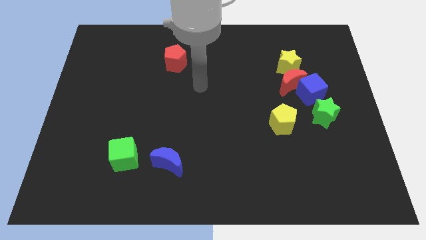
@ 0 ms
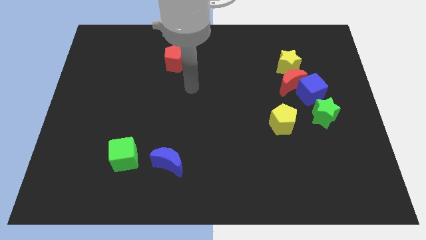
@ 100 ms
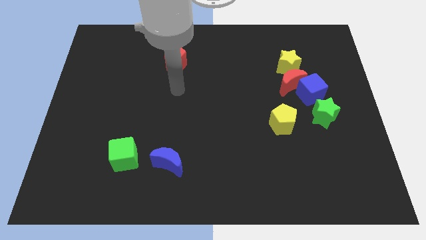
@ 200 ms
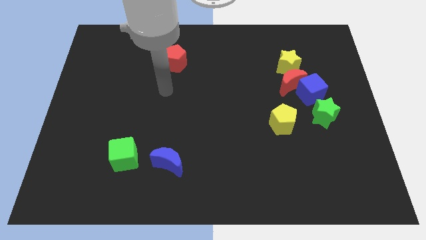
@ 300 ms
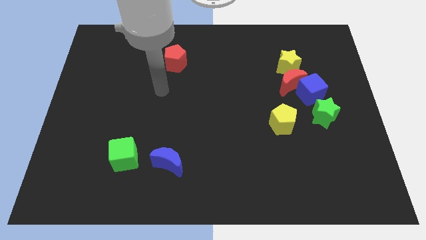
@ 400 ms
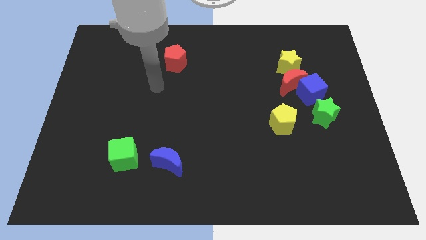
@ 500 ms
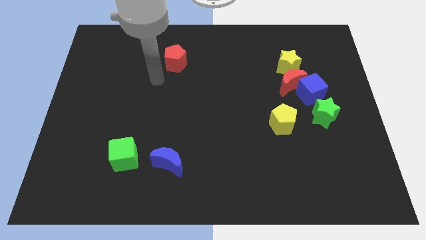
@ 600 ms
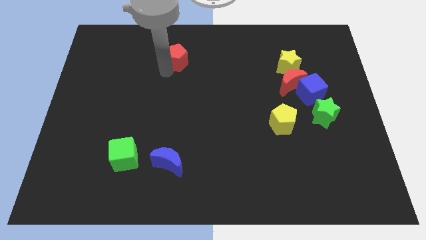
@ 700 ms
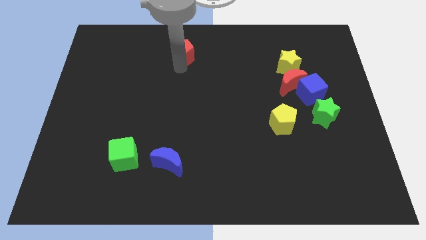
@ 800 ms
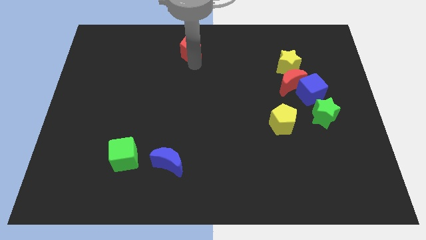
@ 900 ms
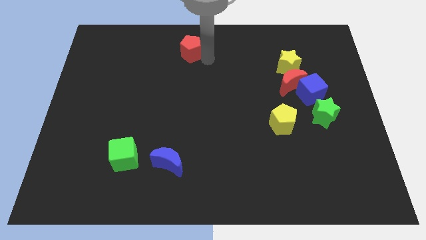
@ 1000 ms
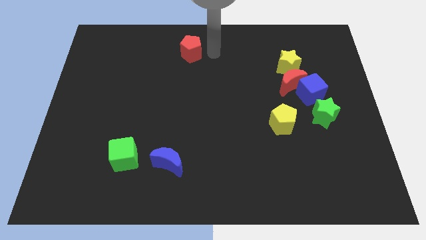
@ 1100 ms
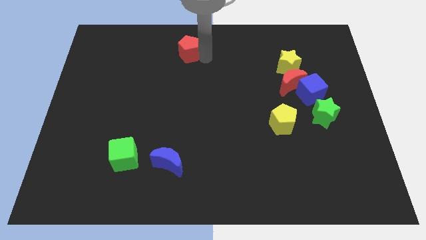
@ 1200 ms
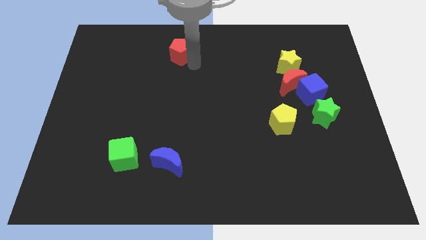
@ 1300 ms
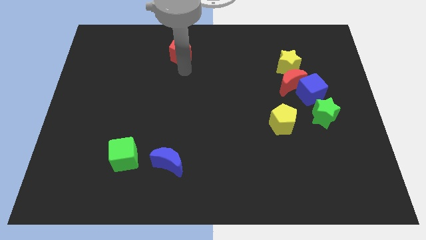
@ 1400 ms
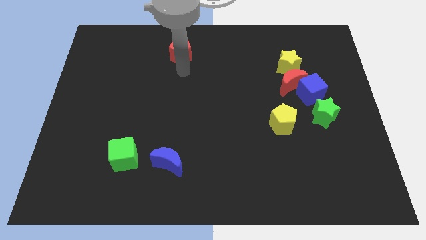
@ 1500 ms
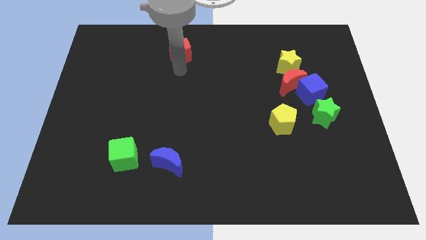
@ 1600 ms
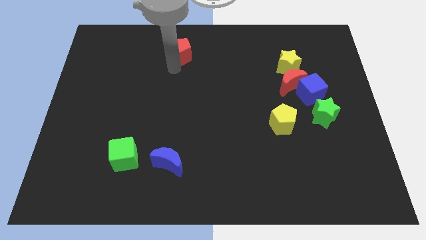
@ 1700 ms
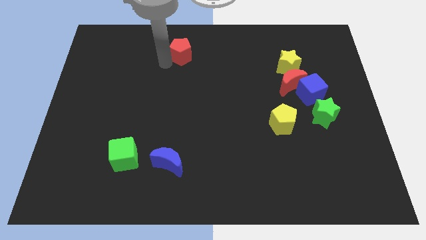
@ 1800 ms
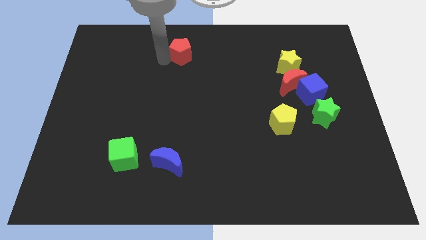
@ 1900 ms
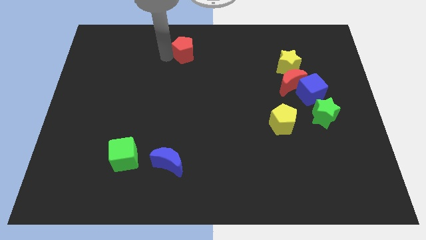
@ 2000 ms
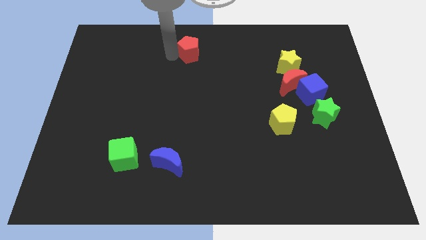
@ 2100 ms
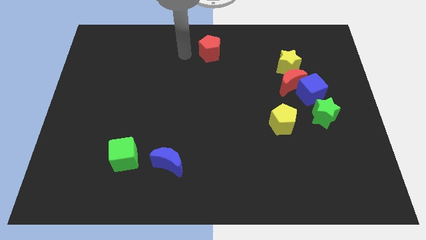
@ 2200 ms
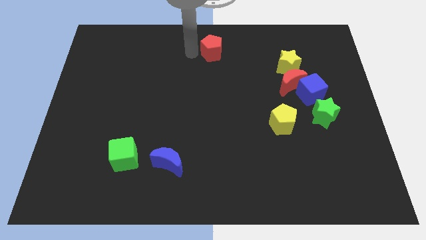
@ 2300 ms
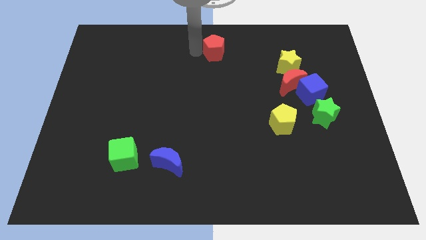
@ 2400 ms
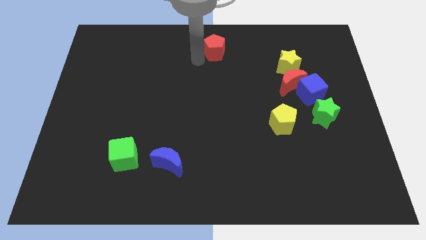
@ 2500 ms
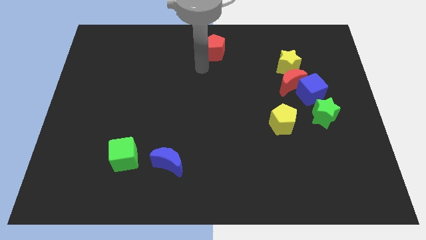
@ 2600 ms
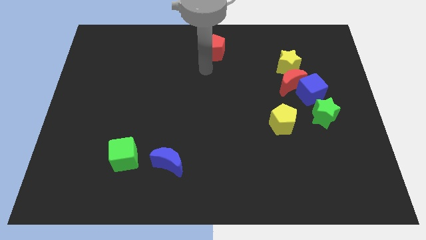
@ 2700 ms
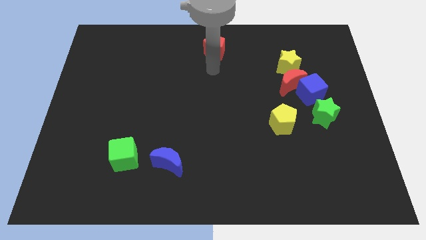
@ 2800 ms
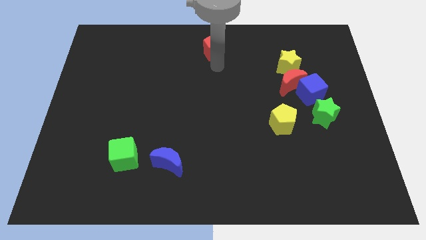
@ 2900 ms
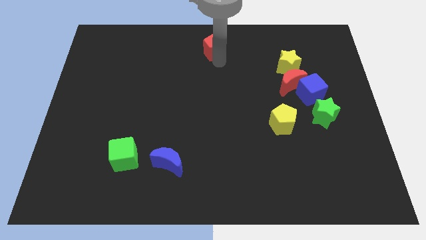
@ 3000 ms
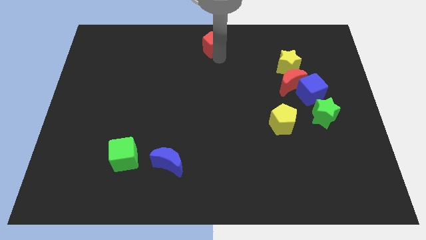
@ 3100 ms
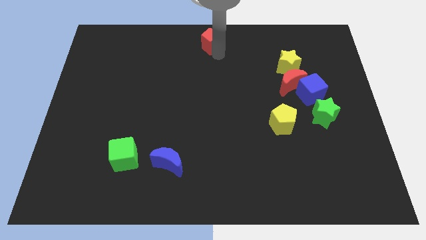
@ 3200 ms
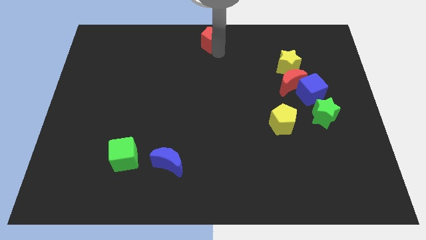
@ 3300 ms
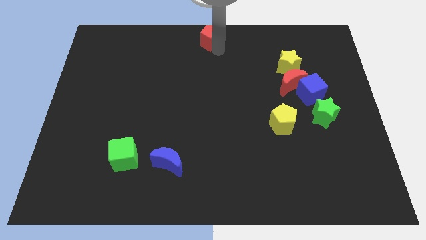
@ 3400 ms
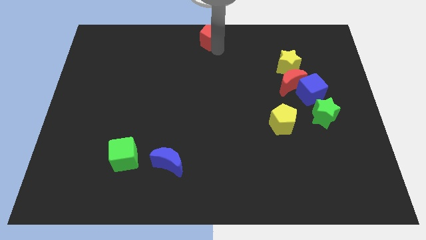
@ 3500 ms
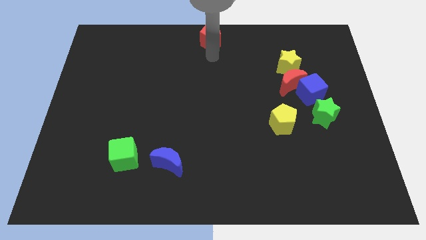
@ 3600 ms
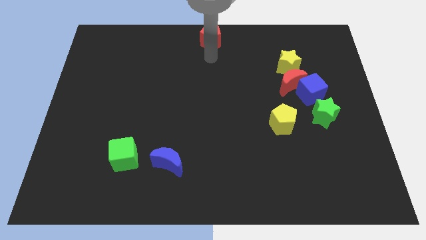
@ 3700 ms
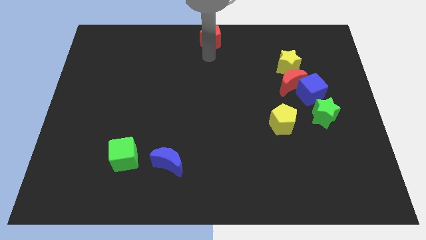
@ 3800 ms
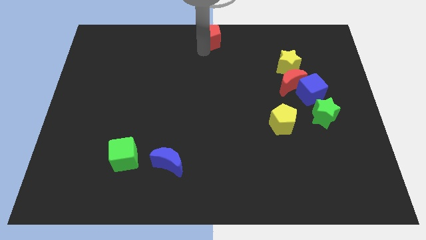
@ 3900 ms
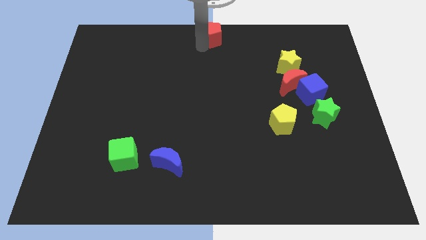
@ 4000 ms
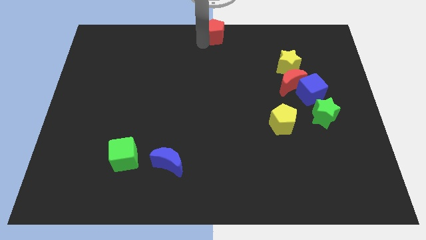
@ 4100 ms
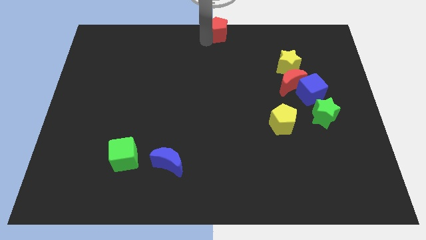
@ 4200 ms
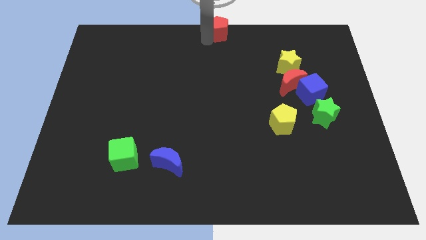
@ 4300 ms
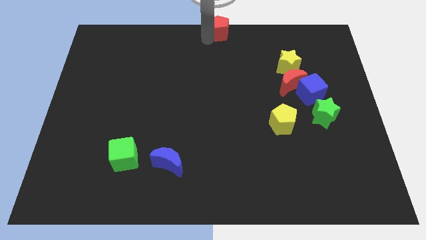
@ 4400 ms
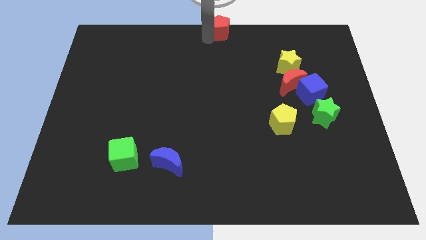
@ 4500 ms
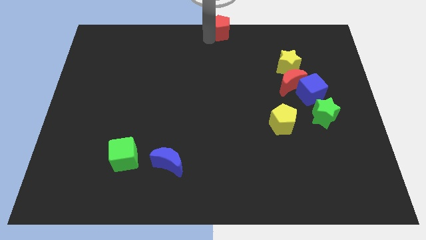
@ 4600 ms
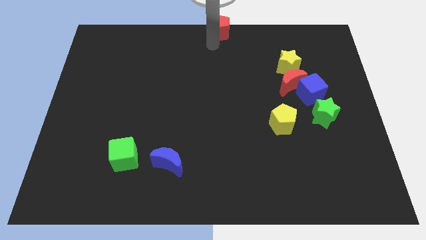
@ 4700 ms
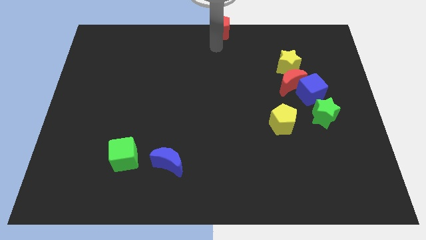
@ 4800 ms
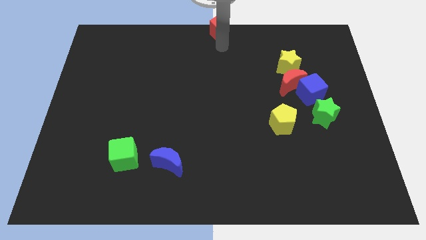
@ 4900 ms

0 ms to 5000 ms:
move the red pentagon to the top center of the board

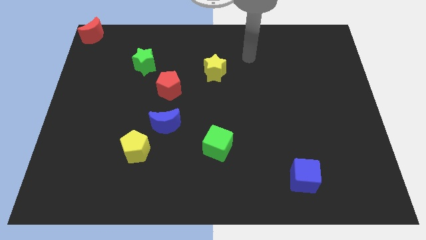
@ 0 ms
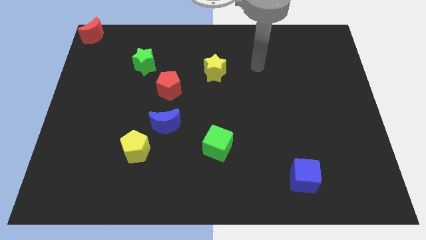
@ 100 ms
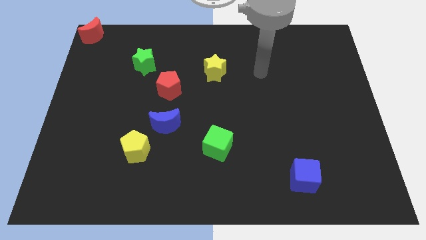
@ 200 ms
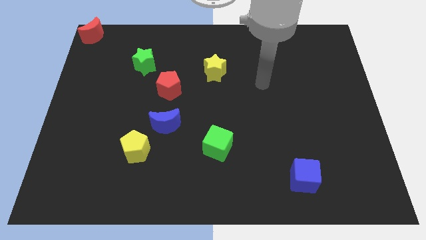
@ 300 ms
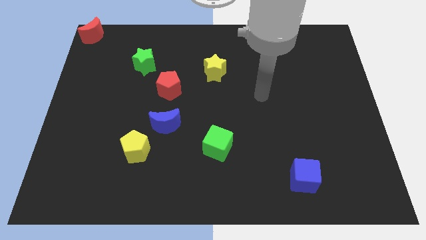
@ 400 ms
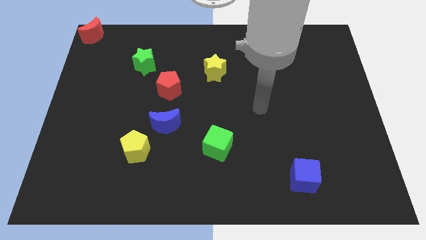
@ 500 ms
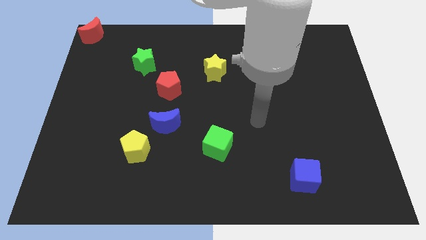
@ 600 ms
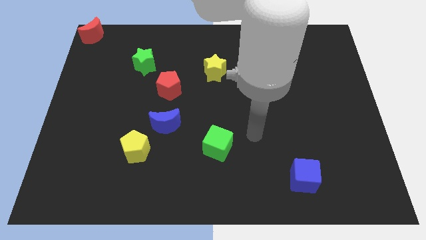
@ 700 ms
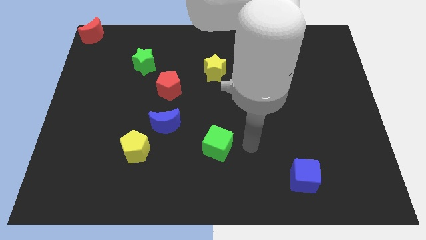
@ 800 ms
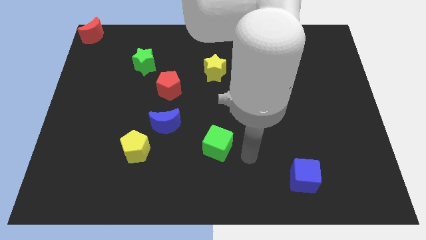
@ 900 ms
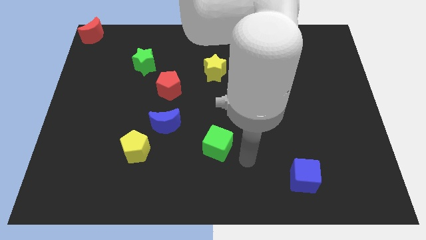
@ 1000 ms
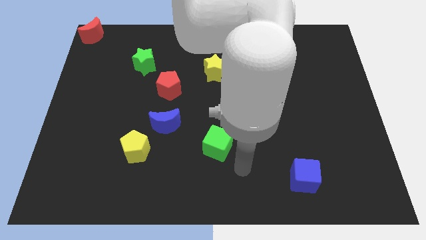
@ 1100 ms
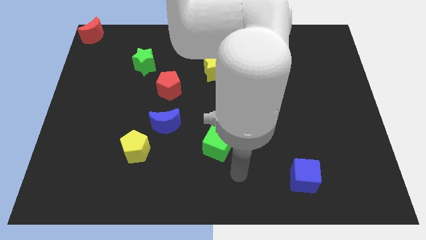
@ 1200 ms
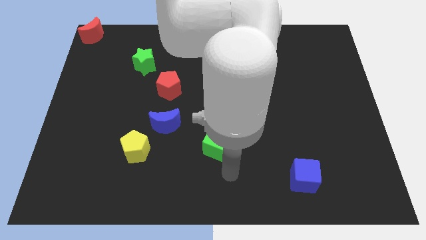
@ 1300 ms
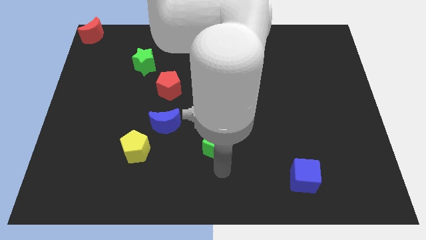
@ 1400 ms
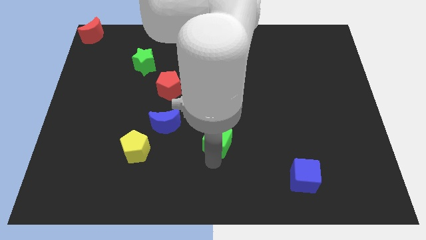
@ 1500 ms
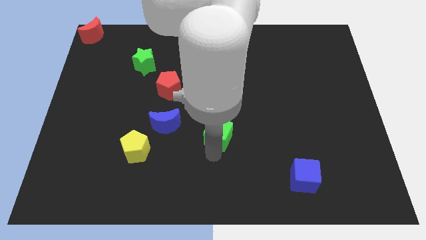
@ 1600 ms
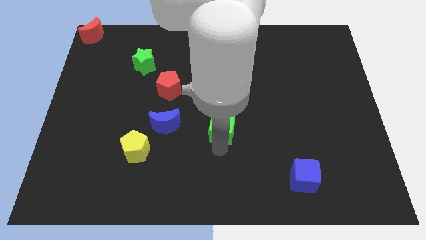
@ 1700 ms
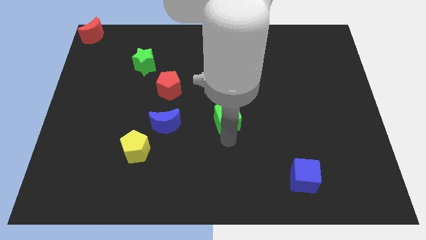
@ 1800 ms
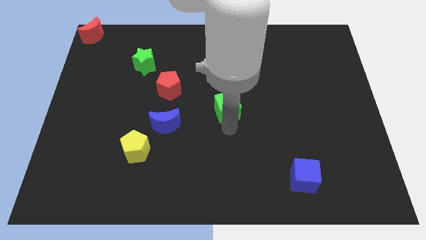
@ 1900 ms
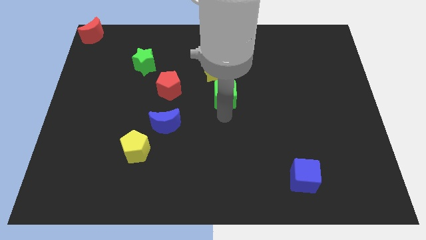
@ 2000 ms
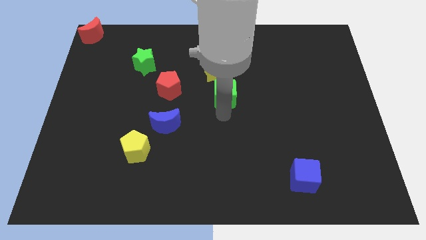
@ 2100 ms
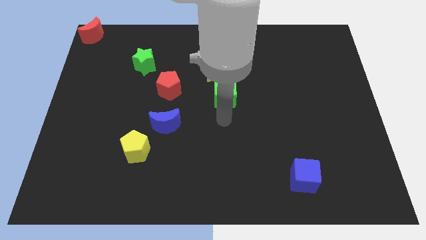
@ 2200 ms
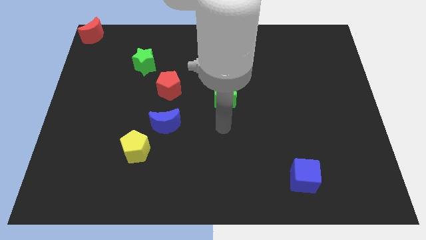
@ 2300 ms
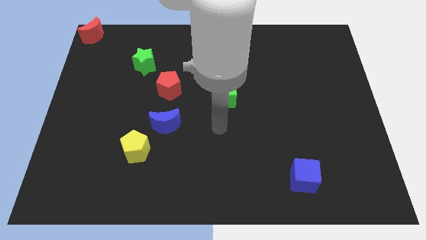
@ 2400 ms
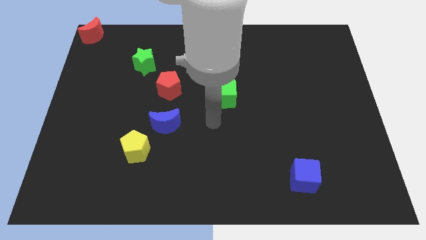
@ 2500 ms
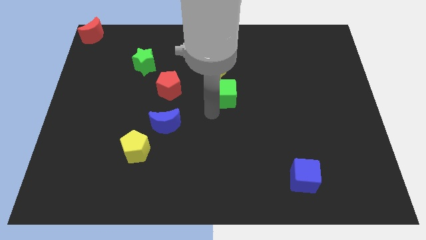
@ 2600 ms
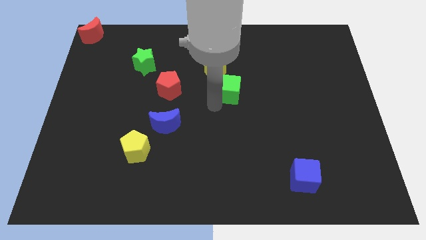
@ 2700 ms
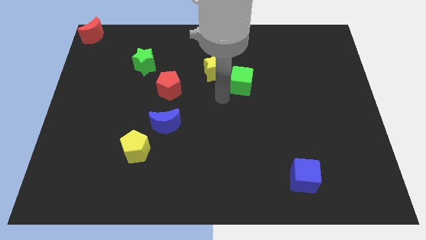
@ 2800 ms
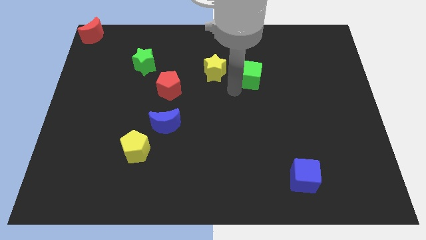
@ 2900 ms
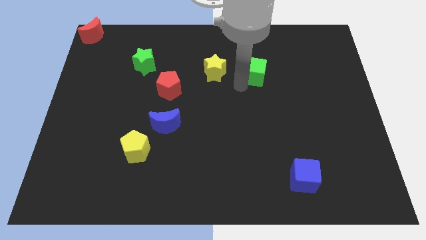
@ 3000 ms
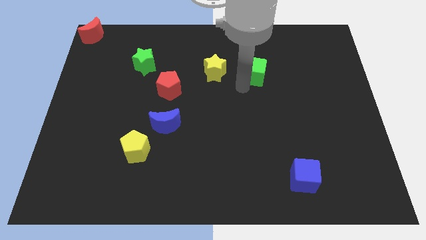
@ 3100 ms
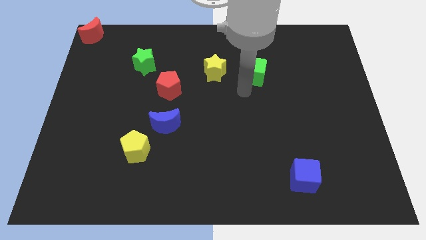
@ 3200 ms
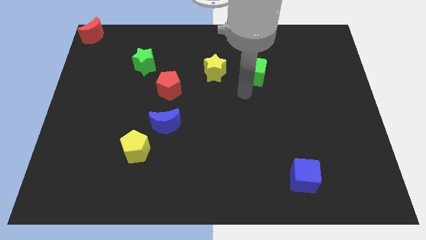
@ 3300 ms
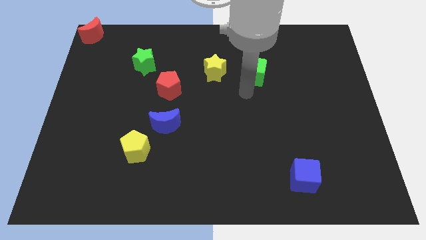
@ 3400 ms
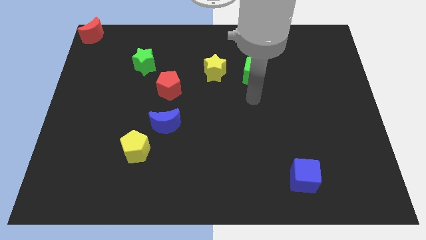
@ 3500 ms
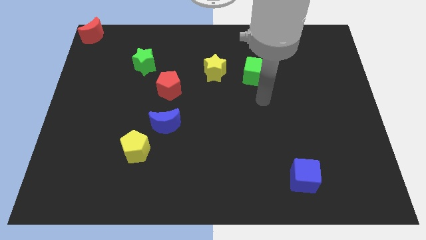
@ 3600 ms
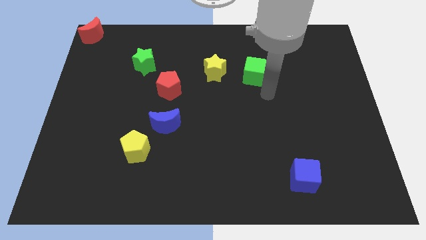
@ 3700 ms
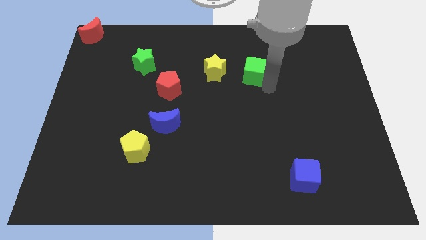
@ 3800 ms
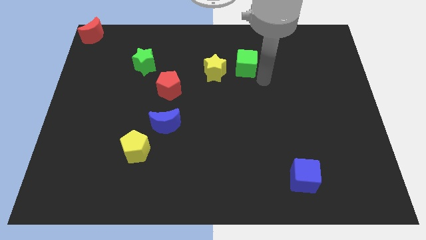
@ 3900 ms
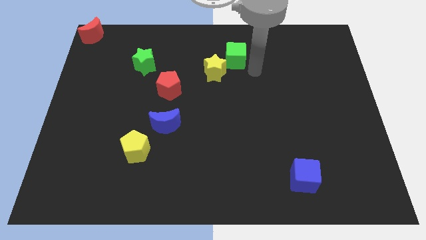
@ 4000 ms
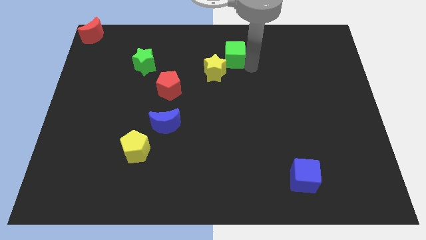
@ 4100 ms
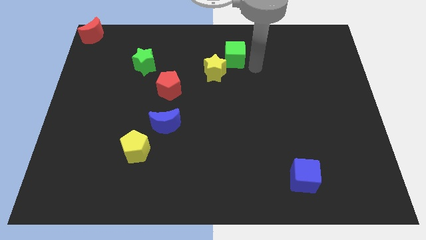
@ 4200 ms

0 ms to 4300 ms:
place the green cube at the top right right side of the yellow star
